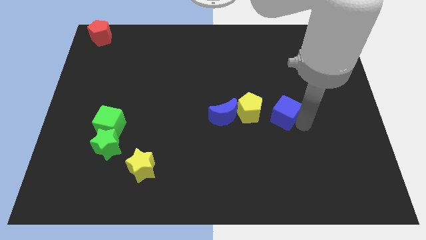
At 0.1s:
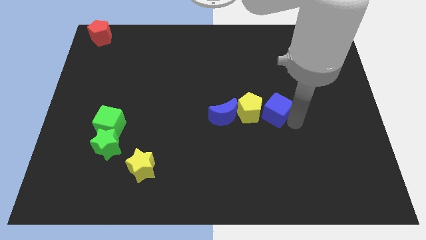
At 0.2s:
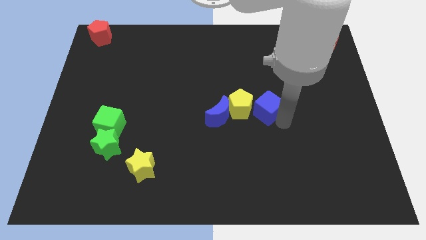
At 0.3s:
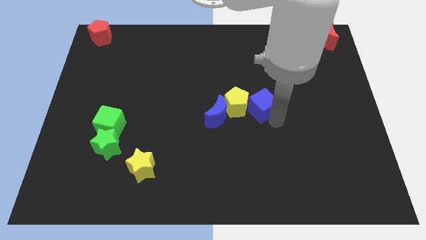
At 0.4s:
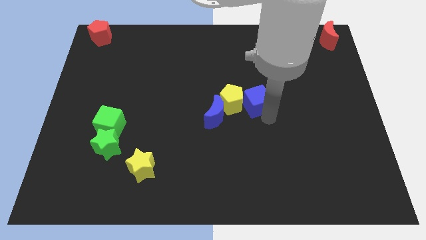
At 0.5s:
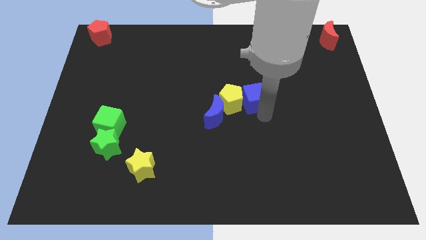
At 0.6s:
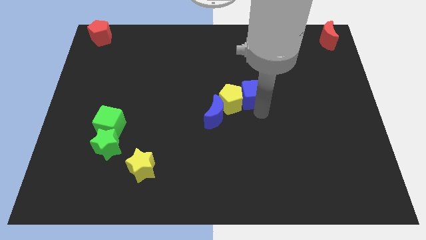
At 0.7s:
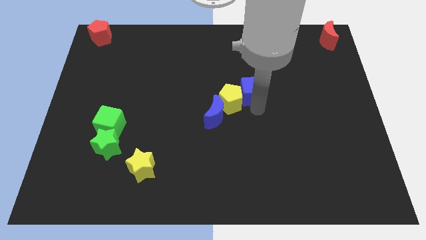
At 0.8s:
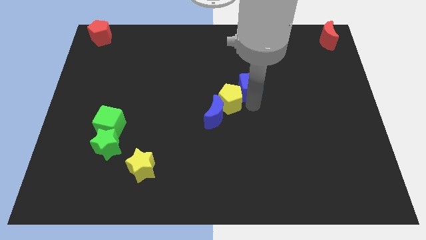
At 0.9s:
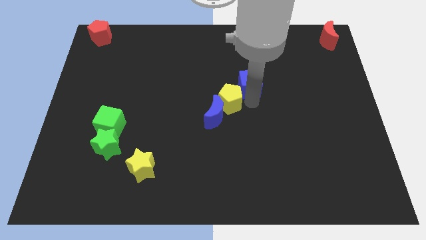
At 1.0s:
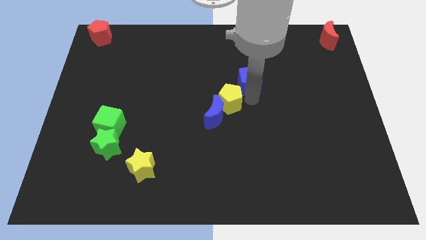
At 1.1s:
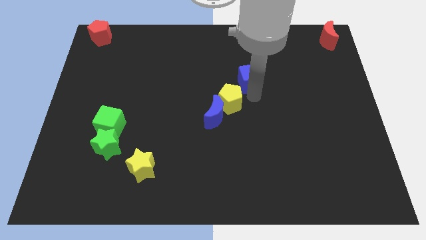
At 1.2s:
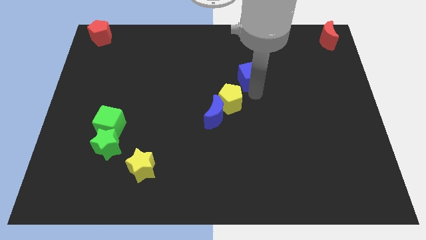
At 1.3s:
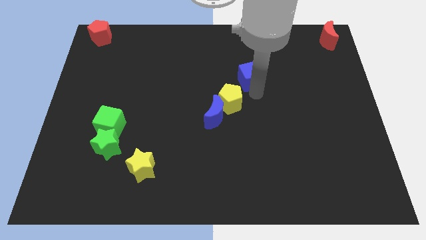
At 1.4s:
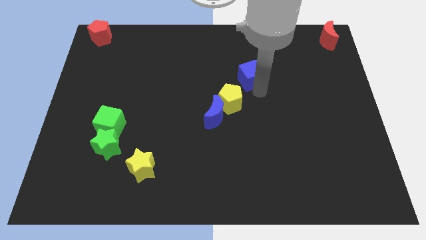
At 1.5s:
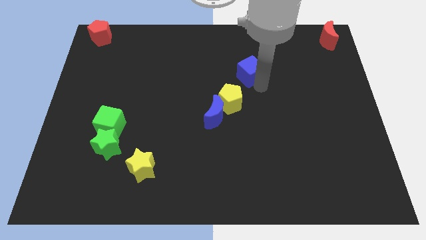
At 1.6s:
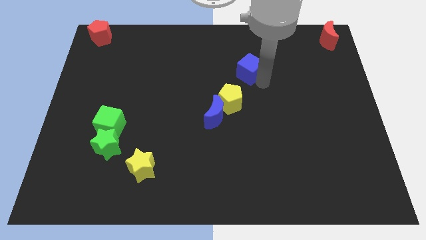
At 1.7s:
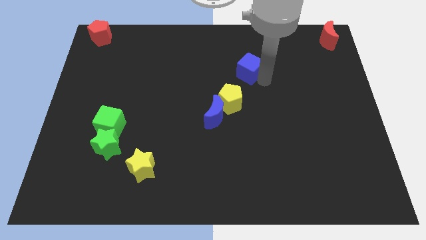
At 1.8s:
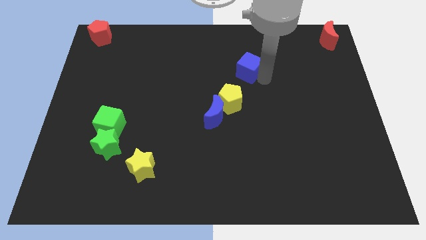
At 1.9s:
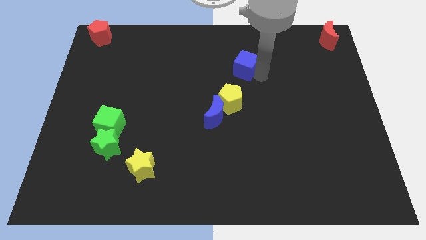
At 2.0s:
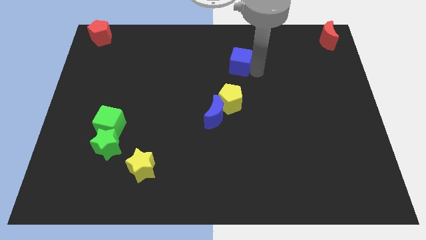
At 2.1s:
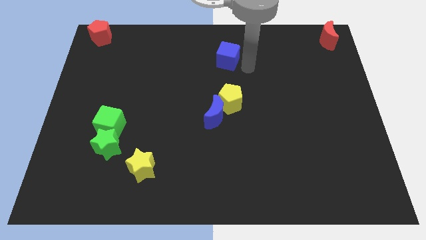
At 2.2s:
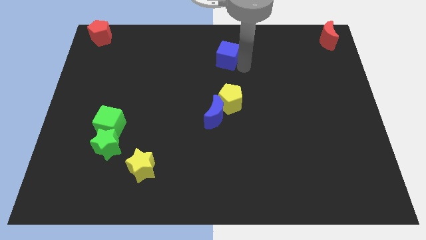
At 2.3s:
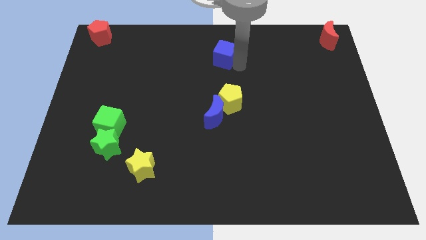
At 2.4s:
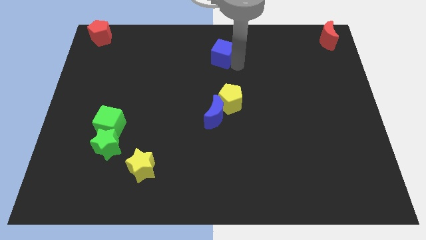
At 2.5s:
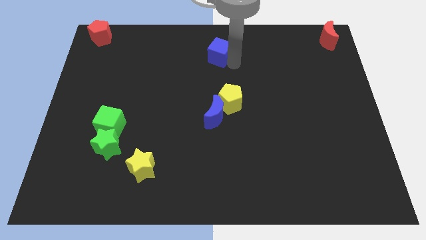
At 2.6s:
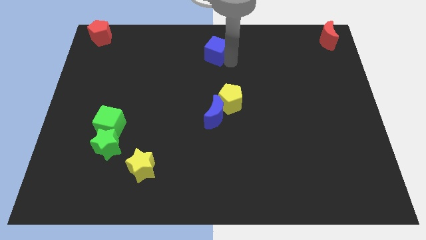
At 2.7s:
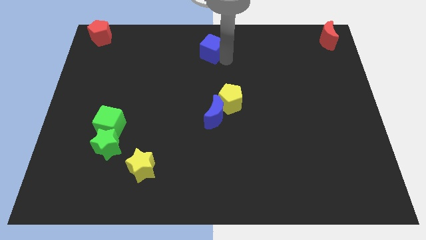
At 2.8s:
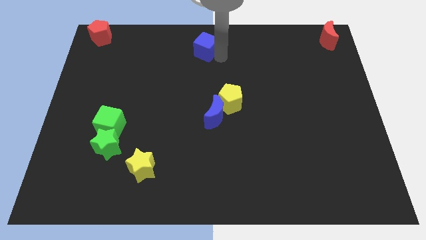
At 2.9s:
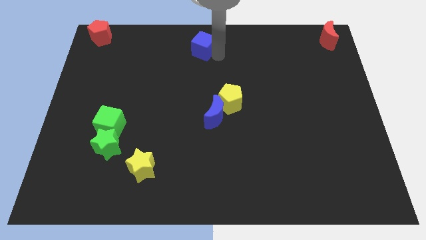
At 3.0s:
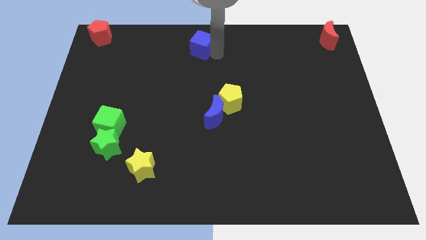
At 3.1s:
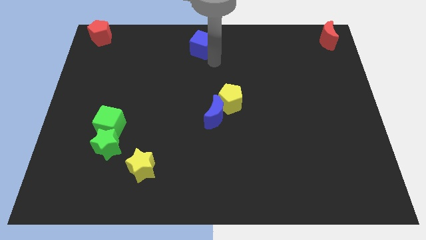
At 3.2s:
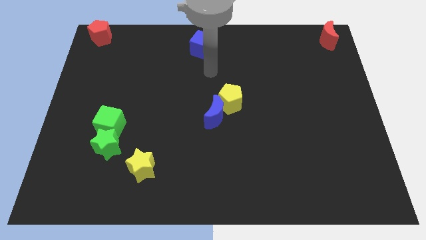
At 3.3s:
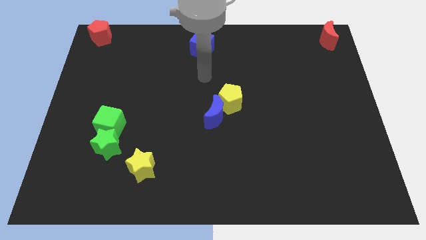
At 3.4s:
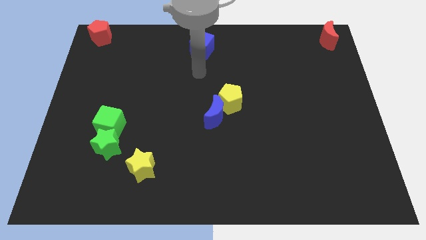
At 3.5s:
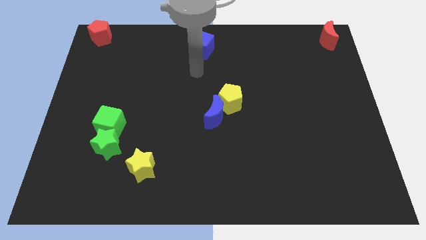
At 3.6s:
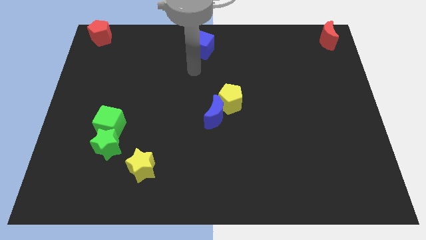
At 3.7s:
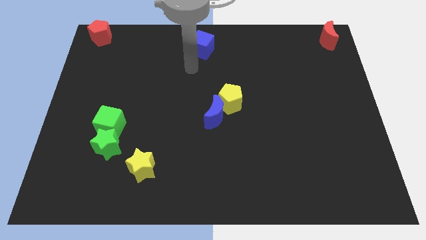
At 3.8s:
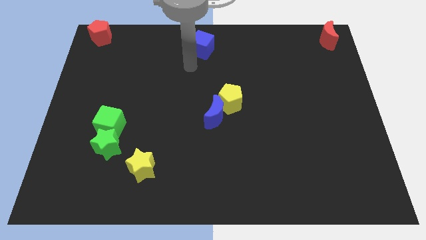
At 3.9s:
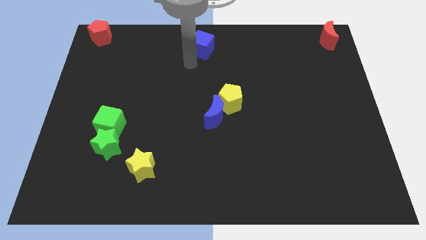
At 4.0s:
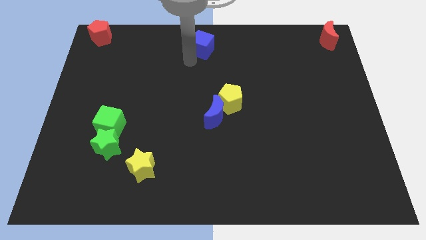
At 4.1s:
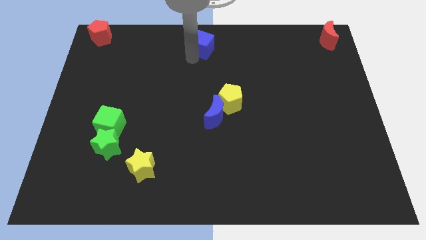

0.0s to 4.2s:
move the blue cube away from the yellow pentagon

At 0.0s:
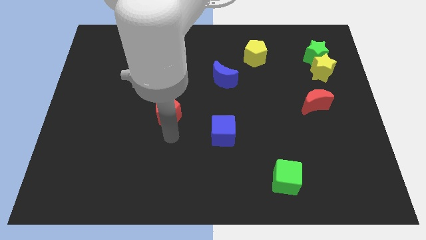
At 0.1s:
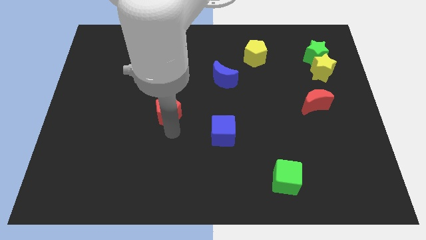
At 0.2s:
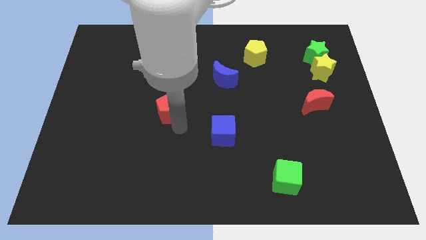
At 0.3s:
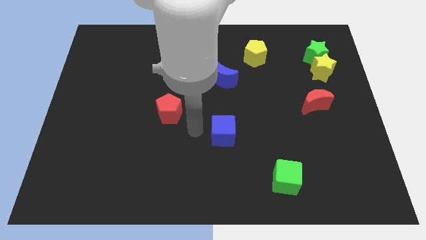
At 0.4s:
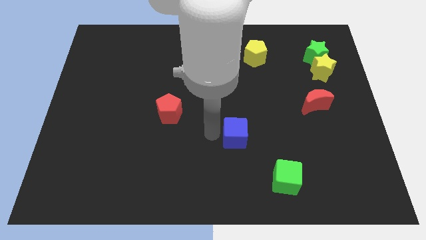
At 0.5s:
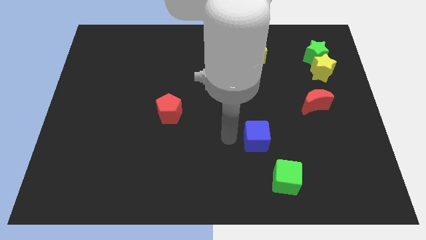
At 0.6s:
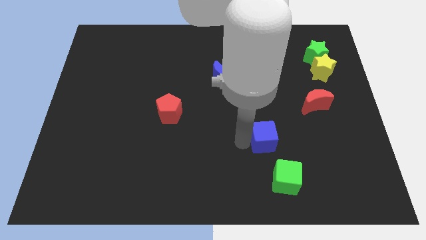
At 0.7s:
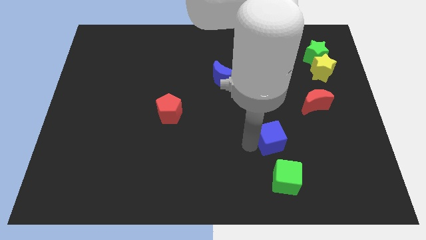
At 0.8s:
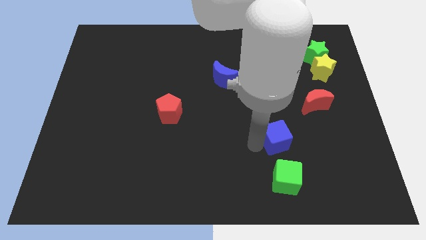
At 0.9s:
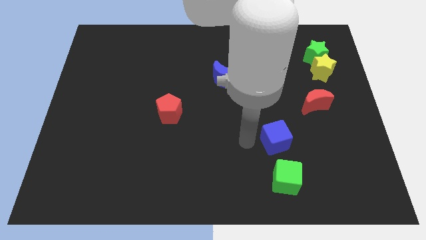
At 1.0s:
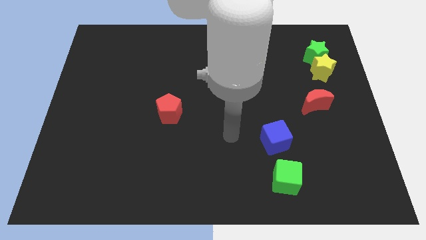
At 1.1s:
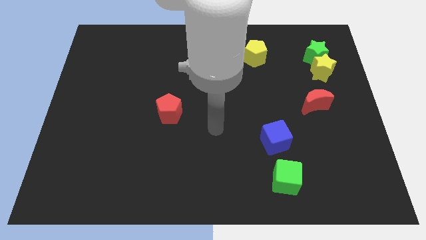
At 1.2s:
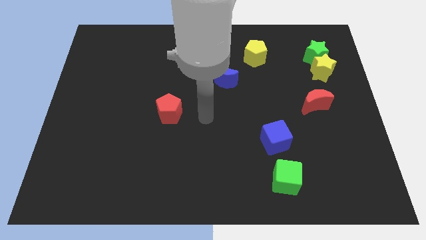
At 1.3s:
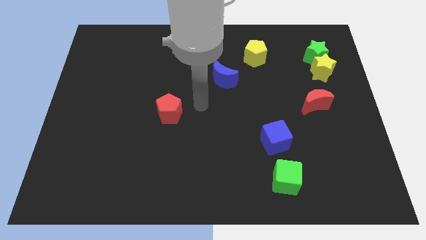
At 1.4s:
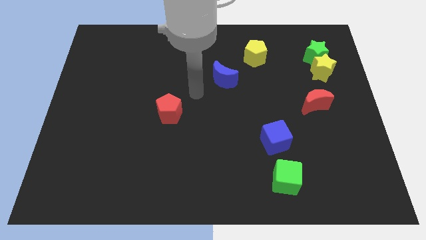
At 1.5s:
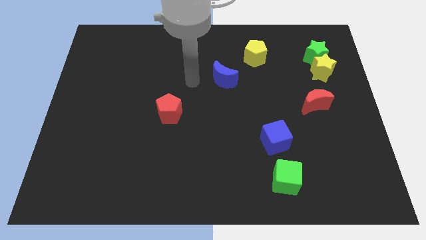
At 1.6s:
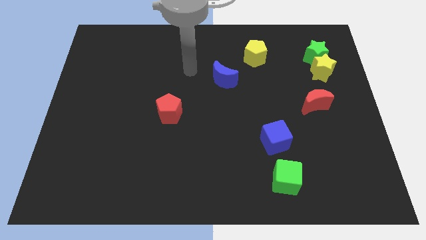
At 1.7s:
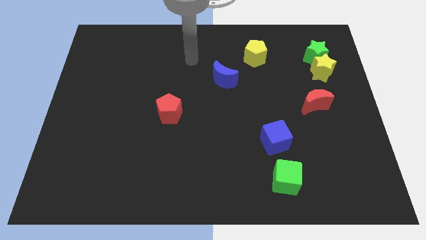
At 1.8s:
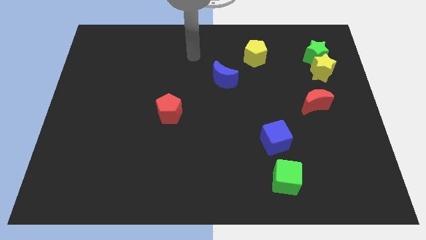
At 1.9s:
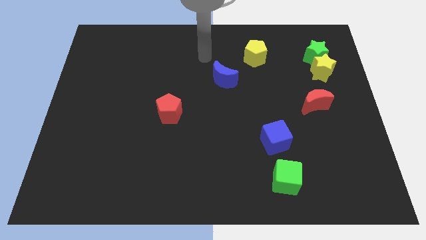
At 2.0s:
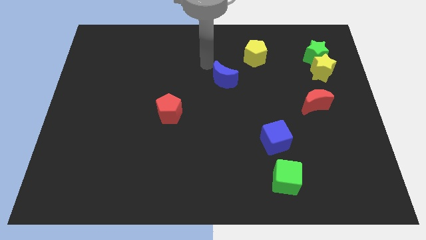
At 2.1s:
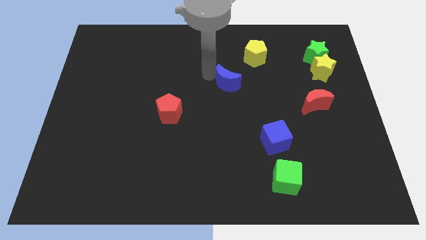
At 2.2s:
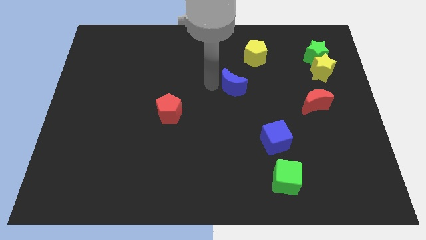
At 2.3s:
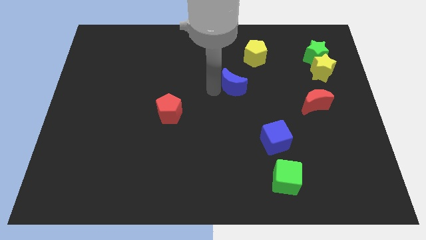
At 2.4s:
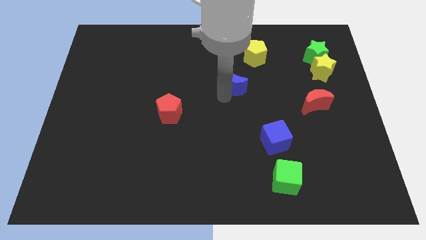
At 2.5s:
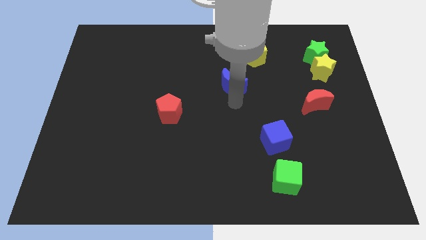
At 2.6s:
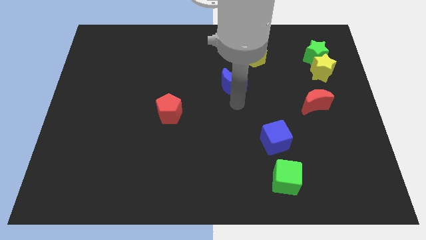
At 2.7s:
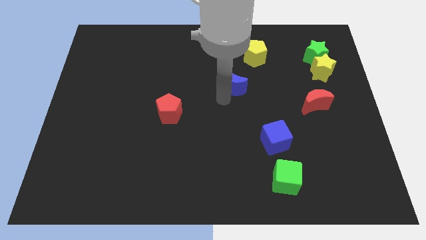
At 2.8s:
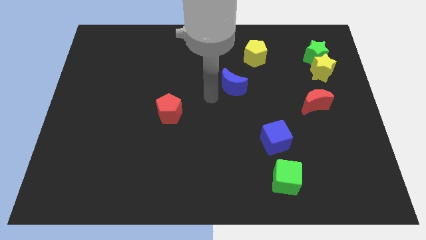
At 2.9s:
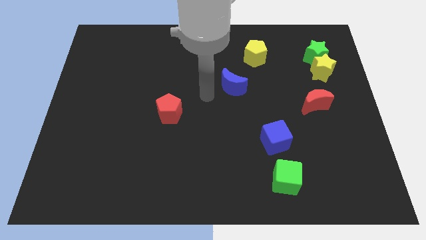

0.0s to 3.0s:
place a blue cube on top of the green cube

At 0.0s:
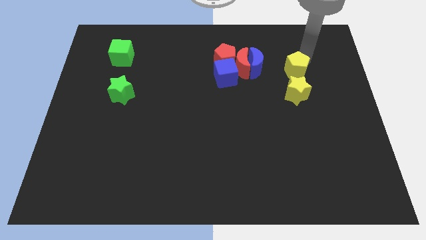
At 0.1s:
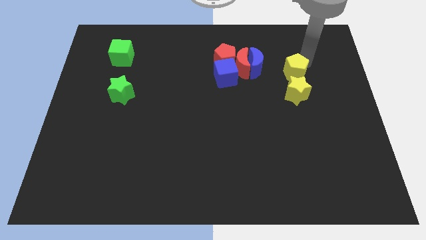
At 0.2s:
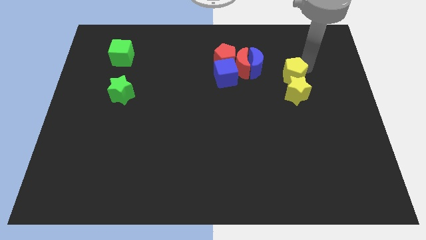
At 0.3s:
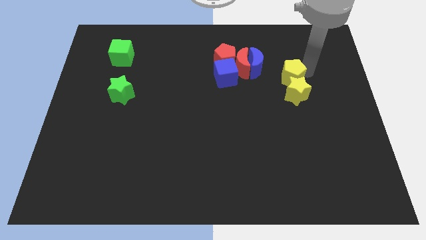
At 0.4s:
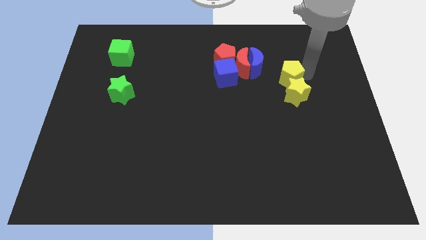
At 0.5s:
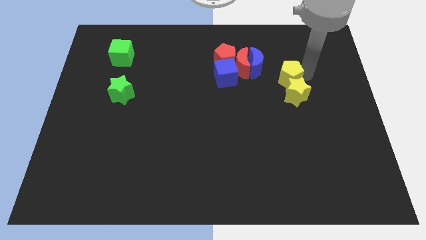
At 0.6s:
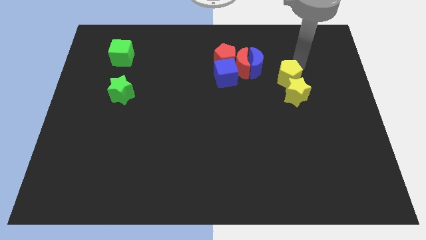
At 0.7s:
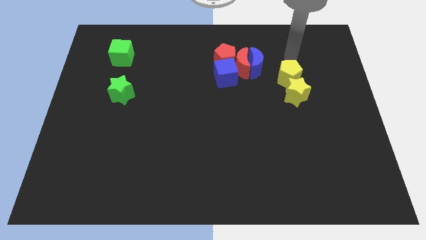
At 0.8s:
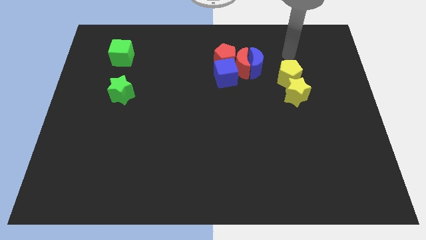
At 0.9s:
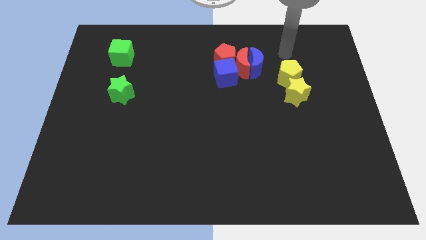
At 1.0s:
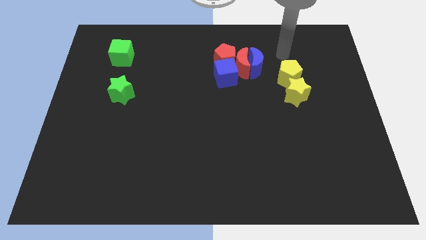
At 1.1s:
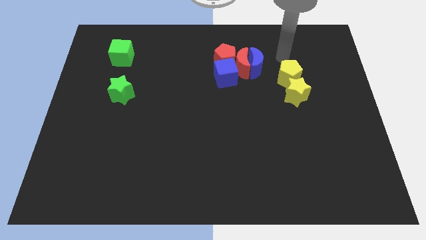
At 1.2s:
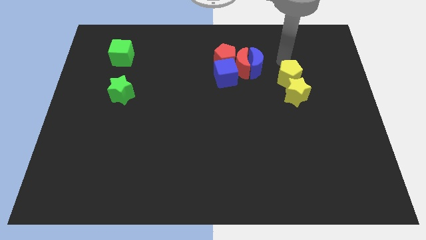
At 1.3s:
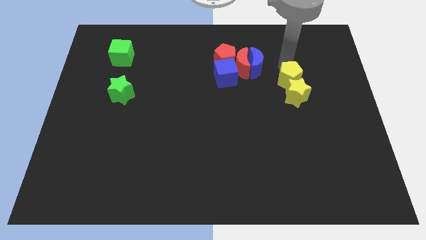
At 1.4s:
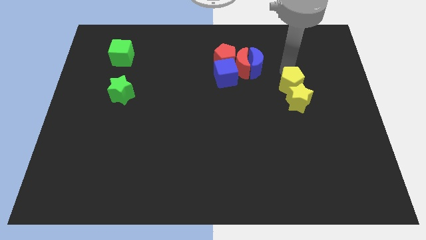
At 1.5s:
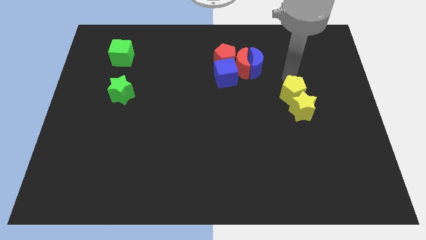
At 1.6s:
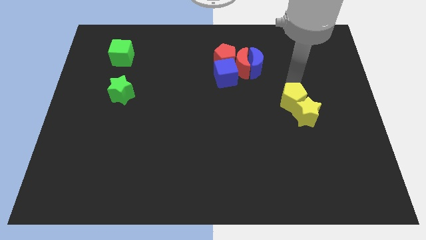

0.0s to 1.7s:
push the yellow pentagon towards the yellow star
